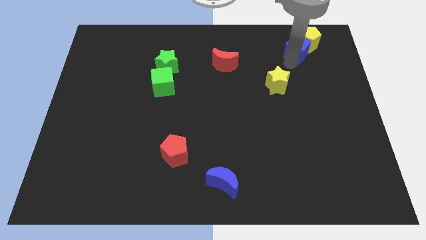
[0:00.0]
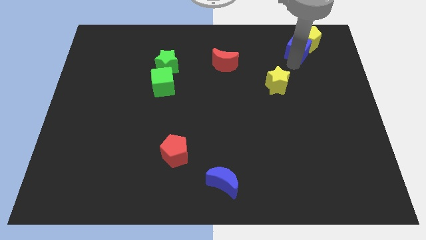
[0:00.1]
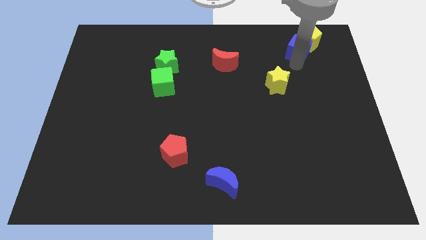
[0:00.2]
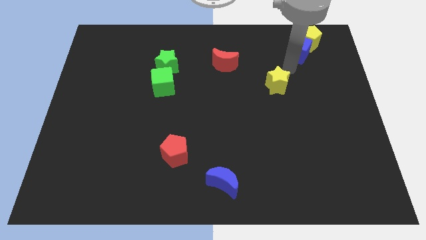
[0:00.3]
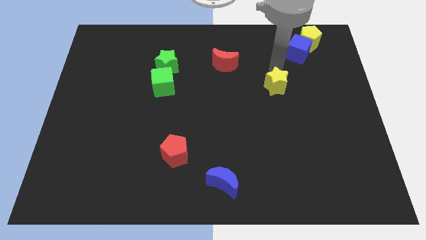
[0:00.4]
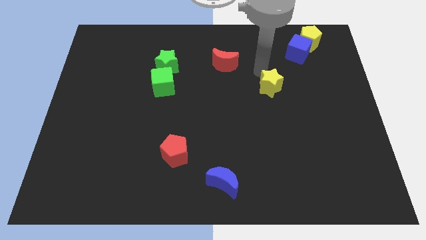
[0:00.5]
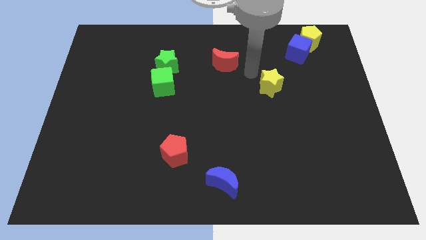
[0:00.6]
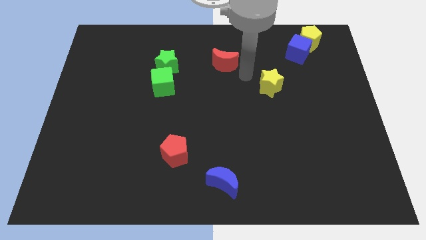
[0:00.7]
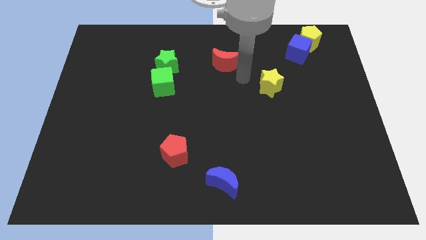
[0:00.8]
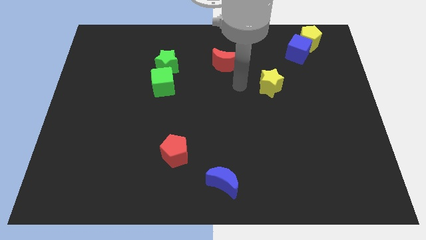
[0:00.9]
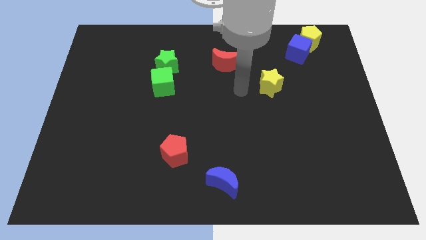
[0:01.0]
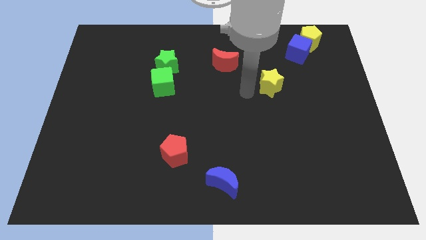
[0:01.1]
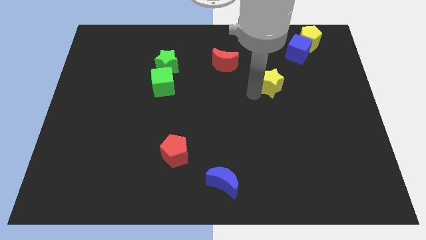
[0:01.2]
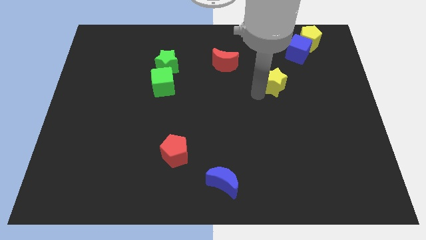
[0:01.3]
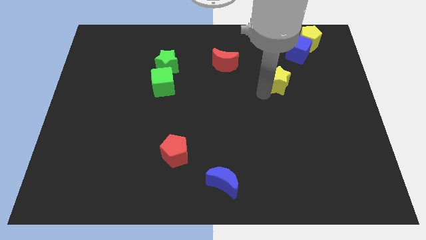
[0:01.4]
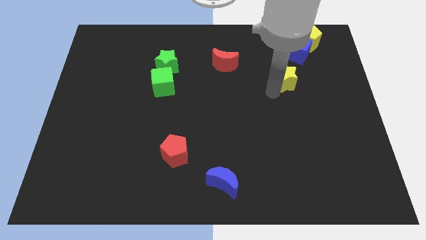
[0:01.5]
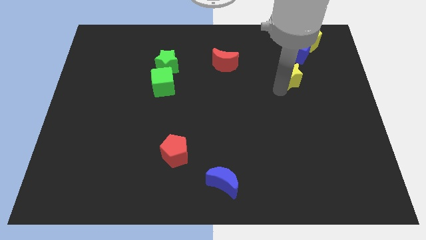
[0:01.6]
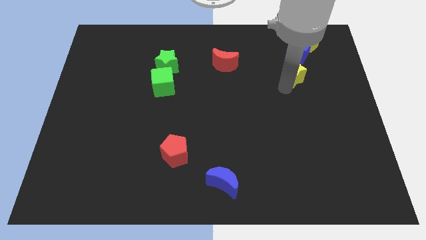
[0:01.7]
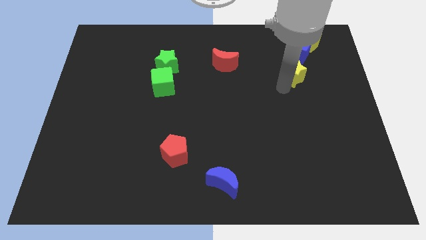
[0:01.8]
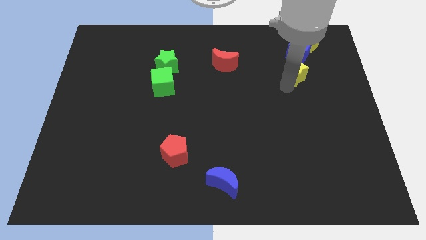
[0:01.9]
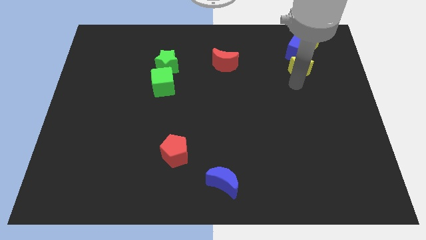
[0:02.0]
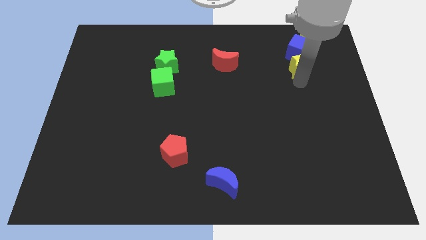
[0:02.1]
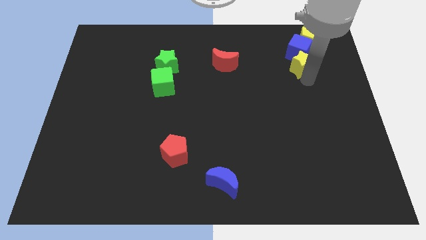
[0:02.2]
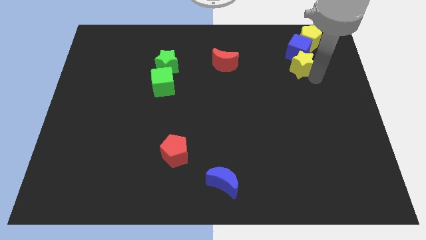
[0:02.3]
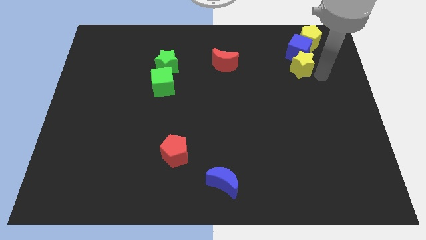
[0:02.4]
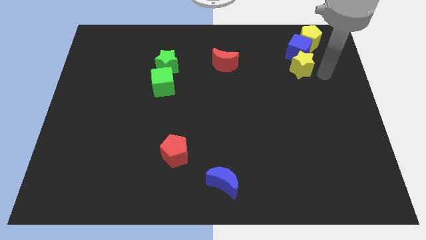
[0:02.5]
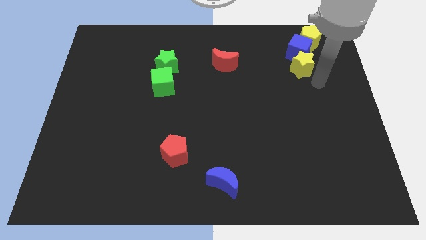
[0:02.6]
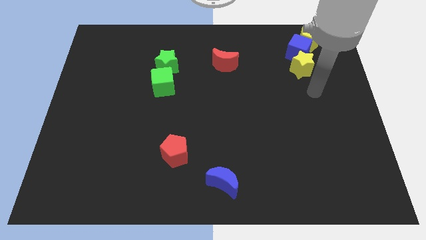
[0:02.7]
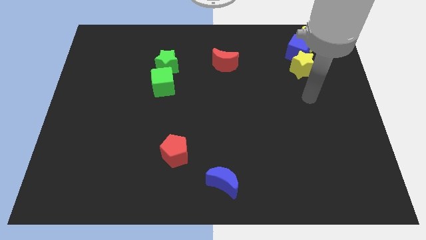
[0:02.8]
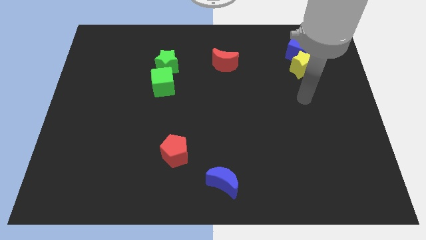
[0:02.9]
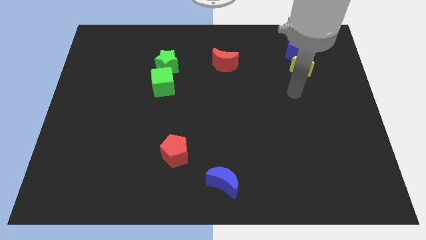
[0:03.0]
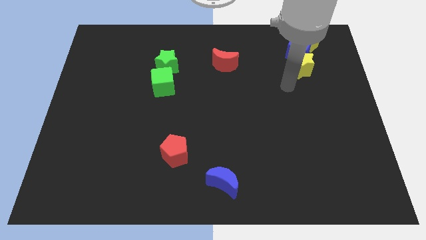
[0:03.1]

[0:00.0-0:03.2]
place the yellow star down to the blue cube

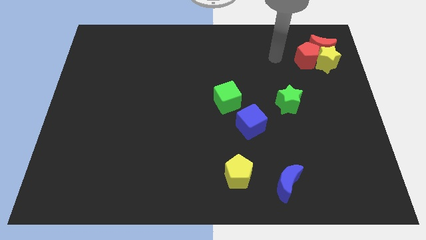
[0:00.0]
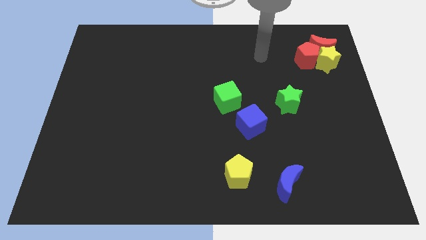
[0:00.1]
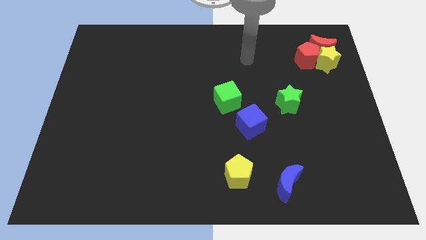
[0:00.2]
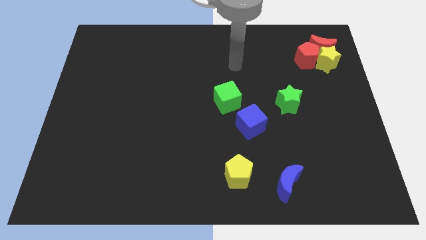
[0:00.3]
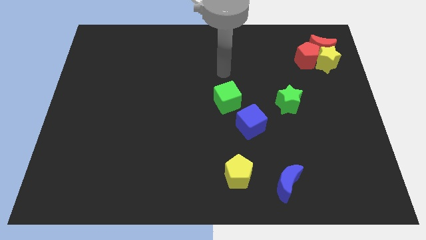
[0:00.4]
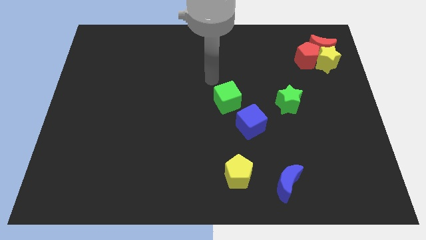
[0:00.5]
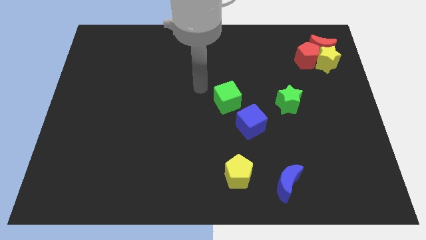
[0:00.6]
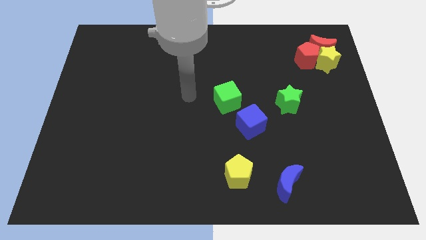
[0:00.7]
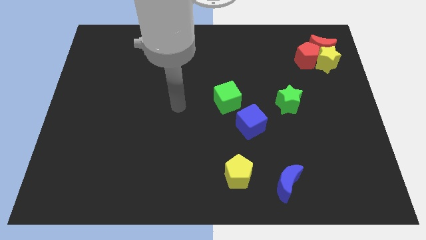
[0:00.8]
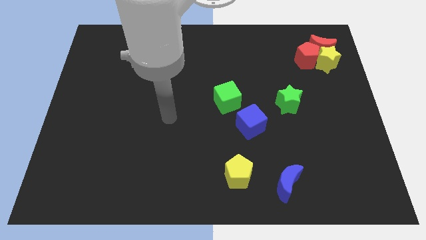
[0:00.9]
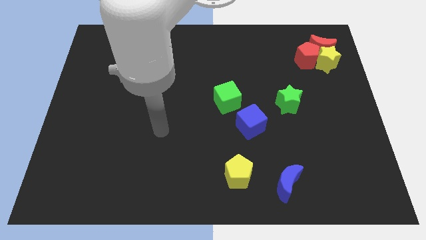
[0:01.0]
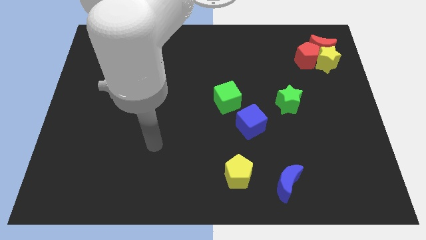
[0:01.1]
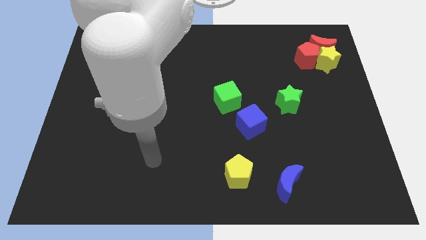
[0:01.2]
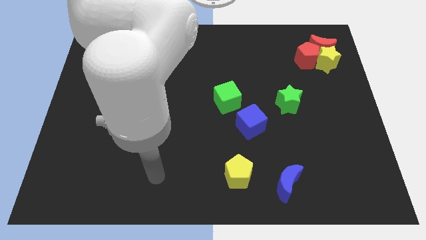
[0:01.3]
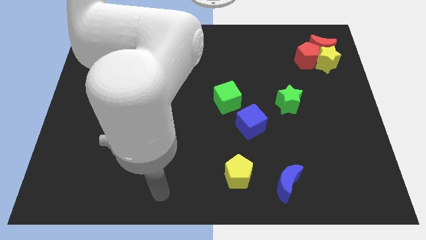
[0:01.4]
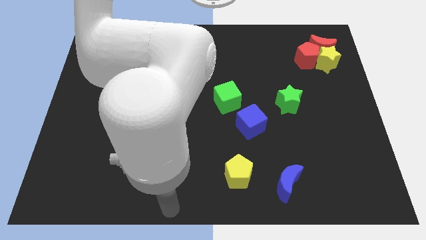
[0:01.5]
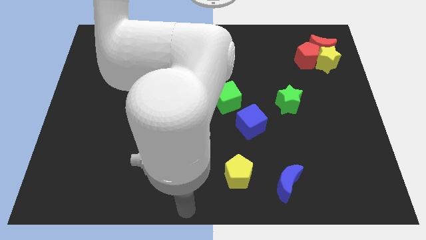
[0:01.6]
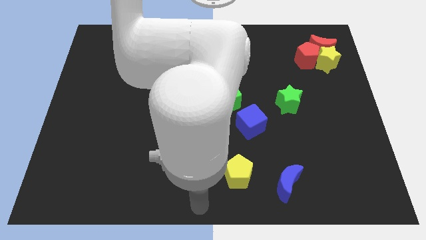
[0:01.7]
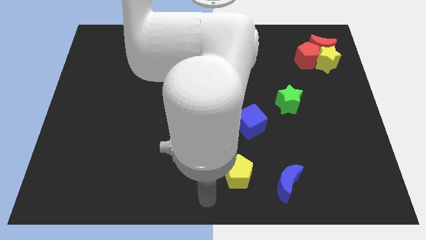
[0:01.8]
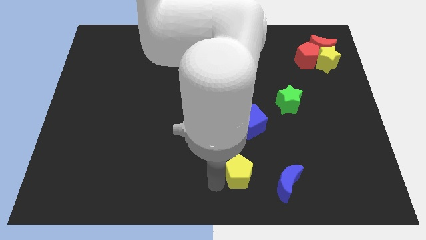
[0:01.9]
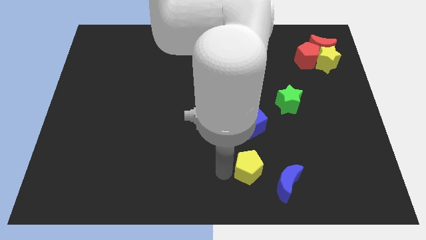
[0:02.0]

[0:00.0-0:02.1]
point the arm to the left of the yellow pentagon

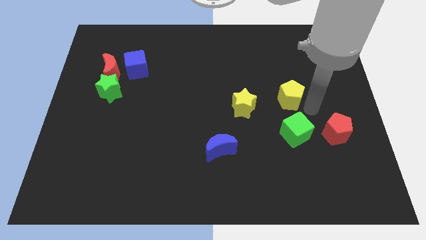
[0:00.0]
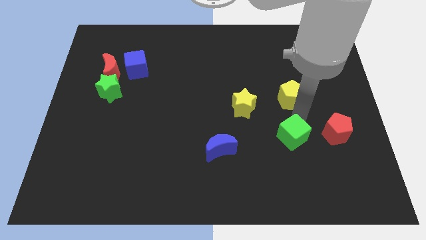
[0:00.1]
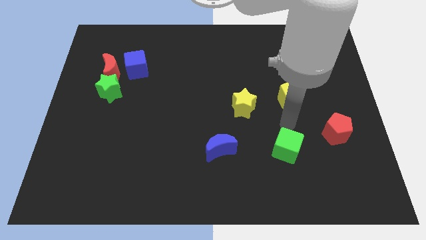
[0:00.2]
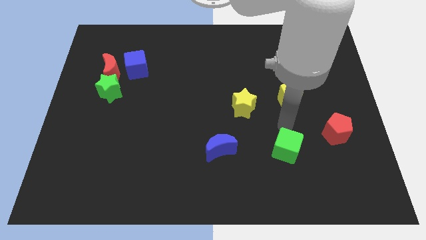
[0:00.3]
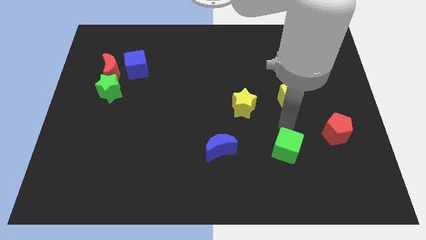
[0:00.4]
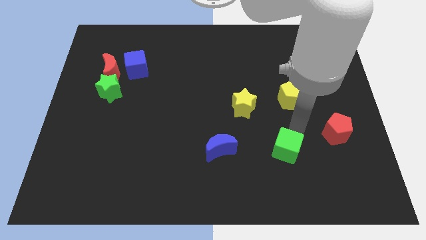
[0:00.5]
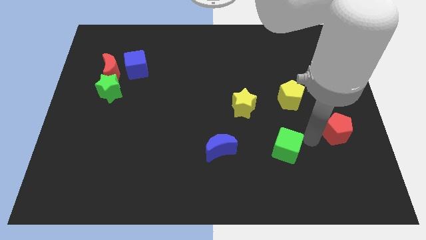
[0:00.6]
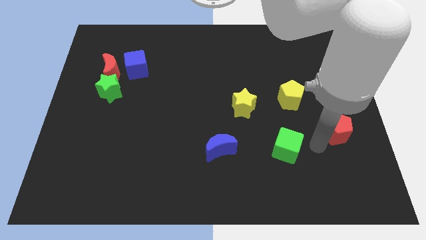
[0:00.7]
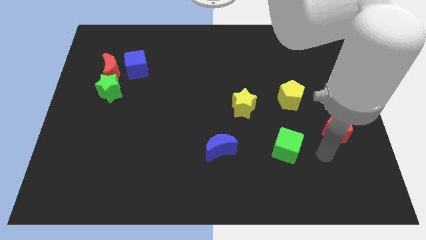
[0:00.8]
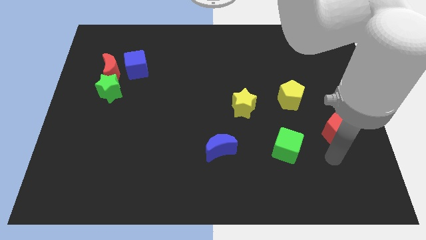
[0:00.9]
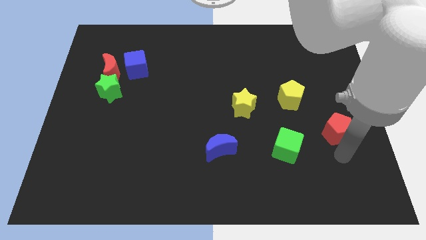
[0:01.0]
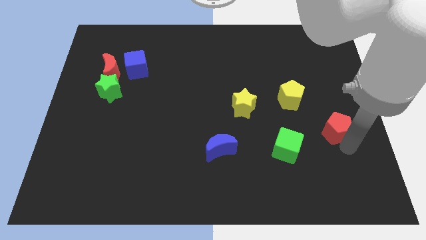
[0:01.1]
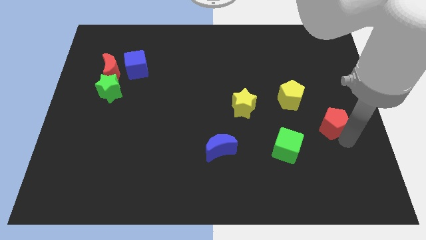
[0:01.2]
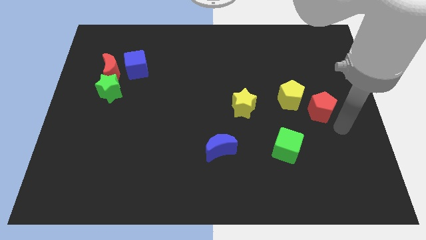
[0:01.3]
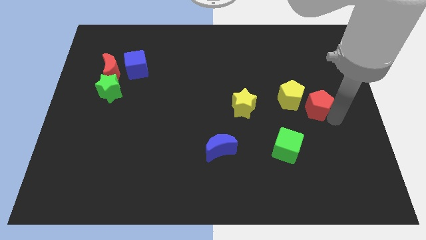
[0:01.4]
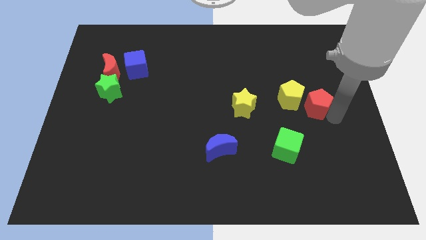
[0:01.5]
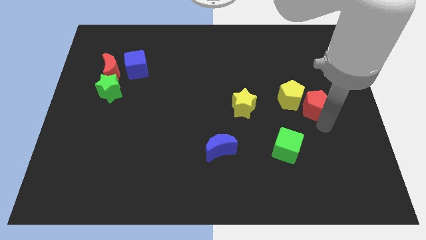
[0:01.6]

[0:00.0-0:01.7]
move the red pentagon towards right of the yellow pentagon

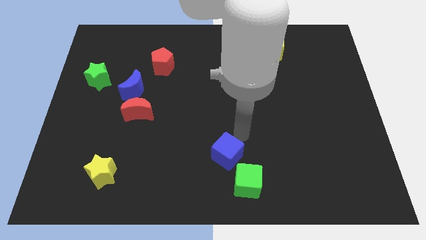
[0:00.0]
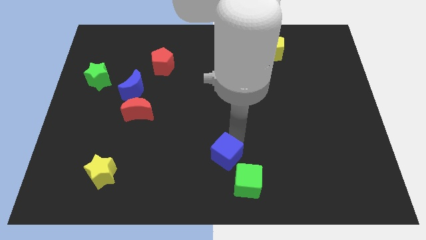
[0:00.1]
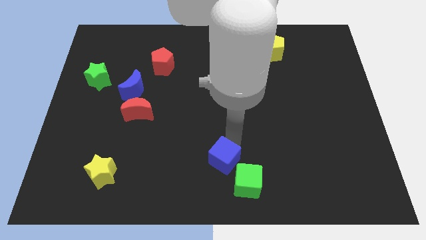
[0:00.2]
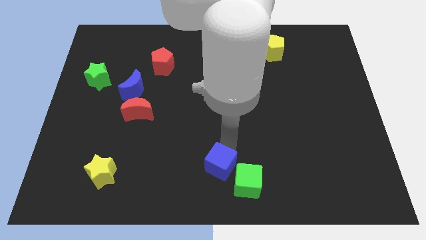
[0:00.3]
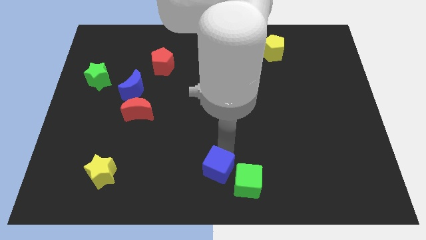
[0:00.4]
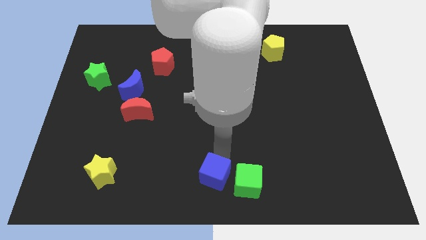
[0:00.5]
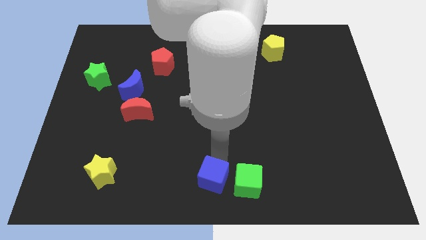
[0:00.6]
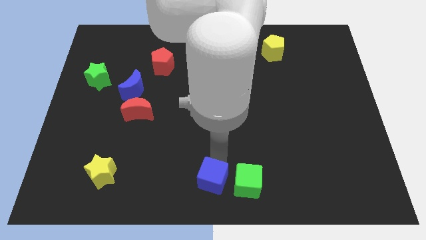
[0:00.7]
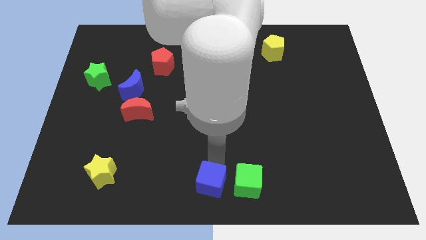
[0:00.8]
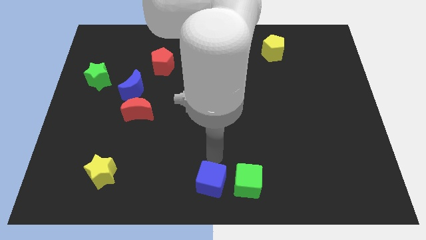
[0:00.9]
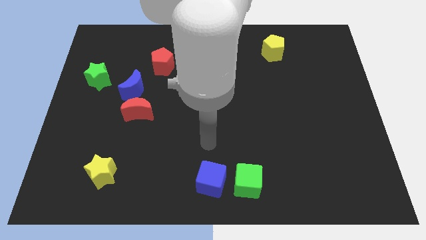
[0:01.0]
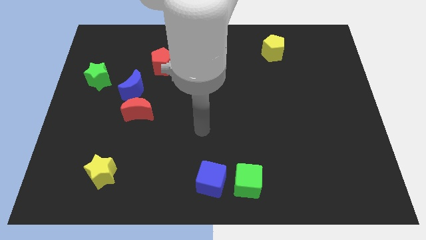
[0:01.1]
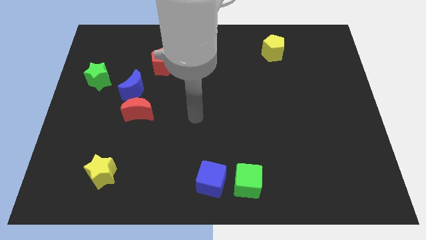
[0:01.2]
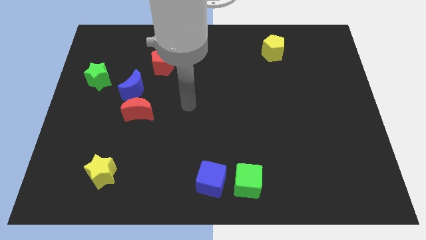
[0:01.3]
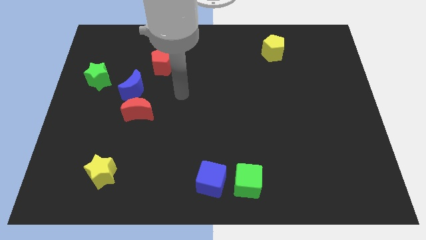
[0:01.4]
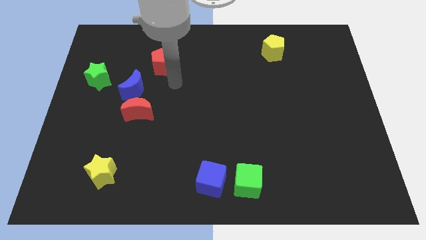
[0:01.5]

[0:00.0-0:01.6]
place the blue cube to the left of the green cube

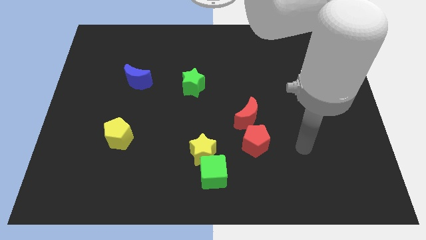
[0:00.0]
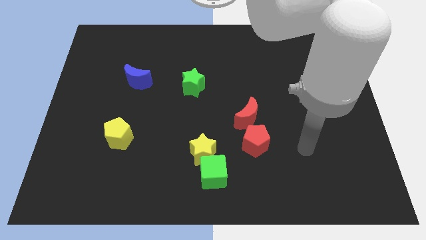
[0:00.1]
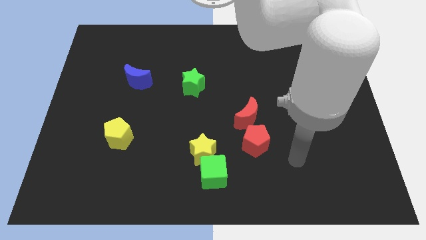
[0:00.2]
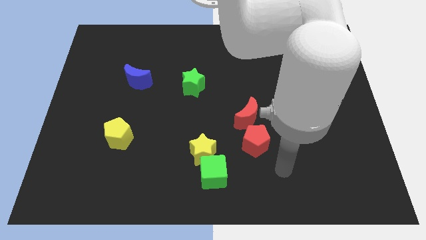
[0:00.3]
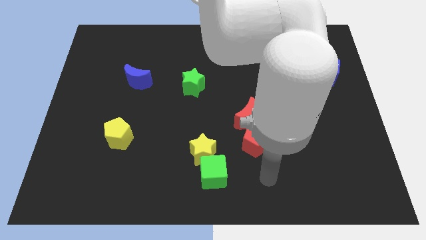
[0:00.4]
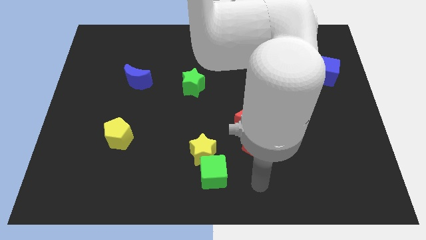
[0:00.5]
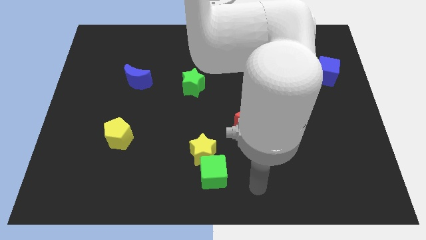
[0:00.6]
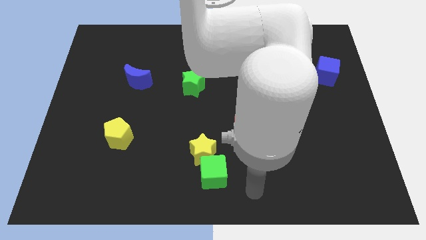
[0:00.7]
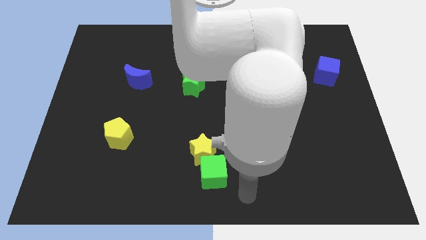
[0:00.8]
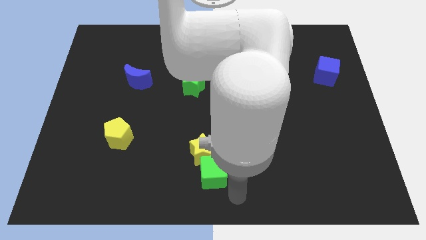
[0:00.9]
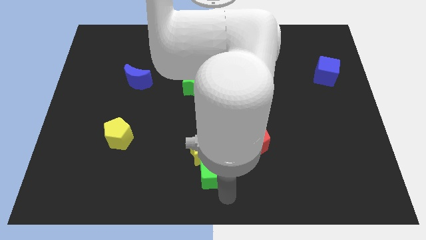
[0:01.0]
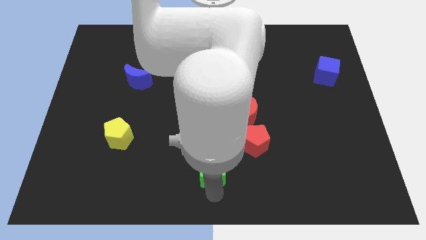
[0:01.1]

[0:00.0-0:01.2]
move your arm towards the green cube
